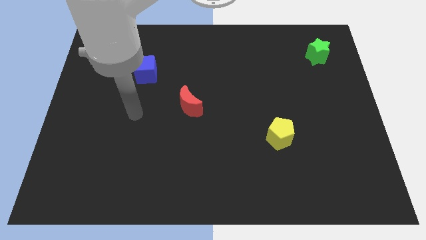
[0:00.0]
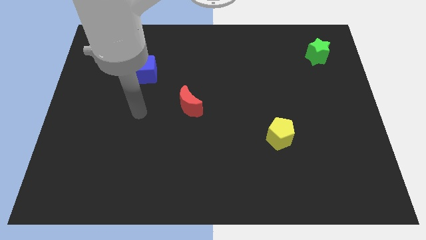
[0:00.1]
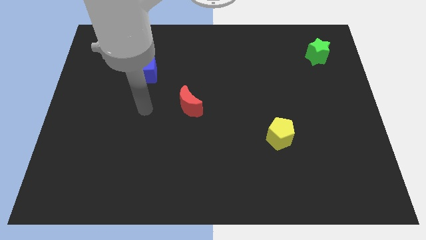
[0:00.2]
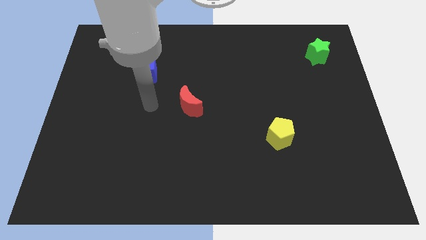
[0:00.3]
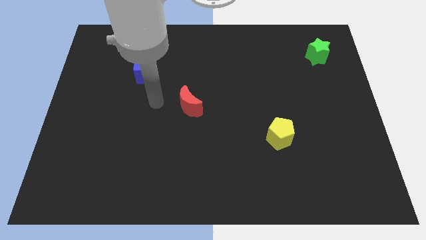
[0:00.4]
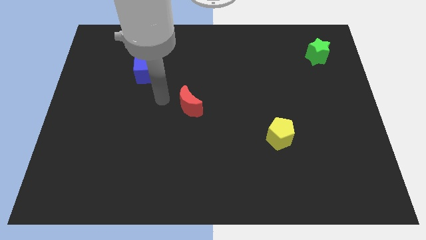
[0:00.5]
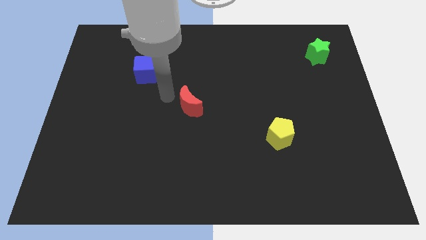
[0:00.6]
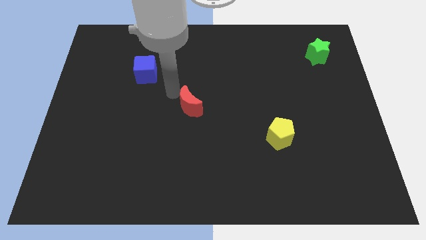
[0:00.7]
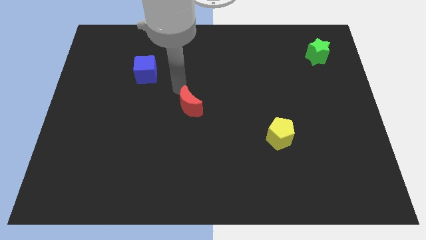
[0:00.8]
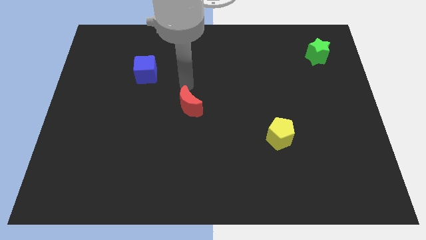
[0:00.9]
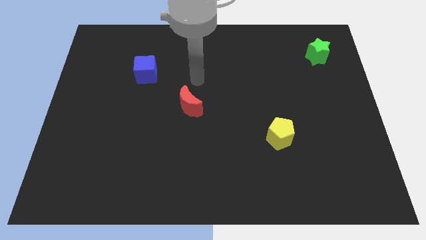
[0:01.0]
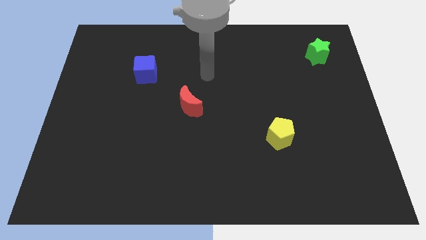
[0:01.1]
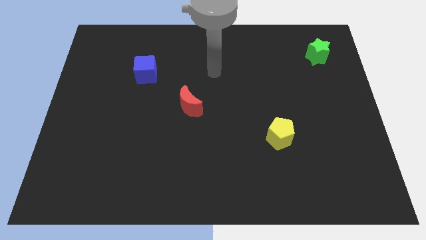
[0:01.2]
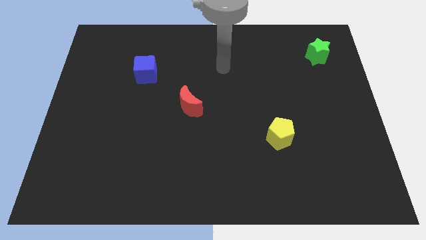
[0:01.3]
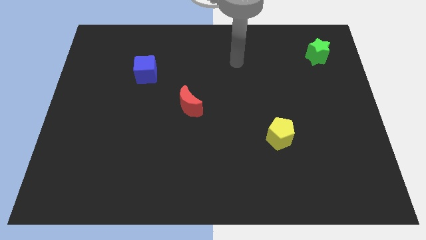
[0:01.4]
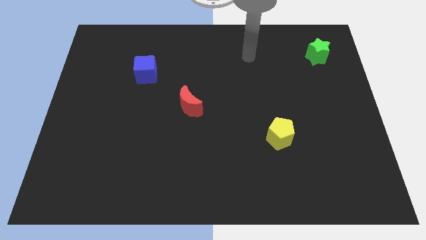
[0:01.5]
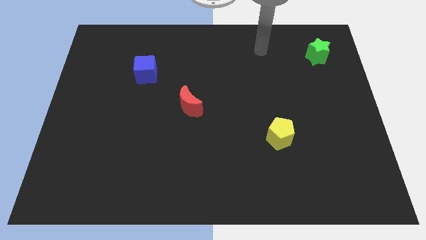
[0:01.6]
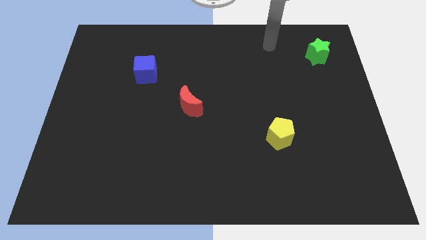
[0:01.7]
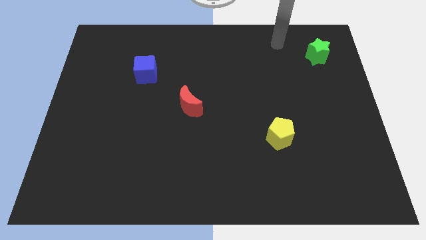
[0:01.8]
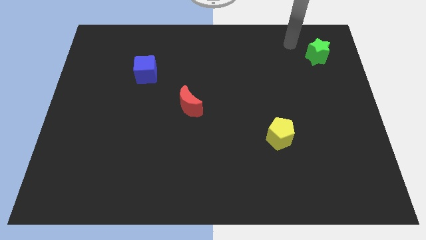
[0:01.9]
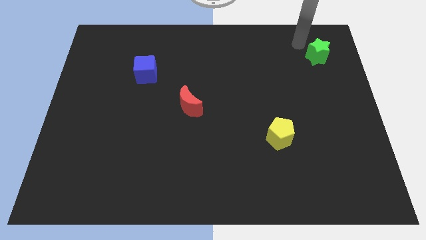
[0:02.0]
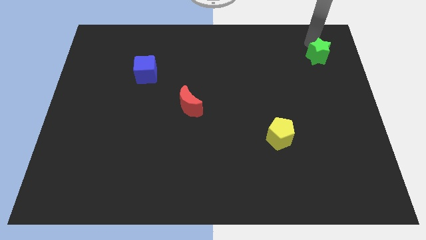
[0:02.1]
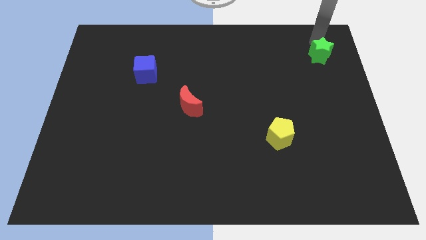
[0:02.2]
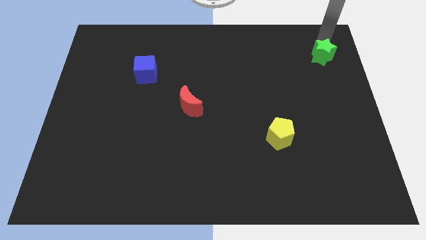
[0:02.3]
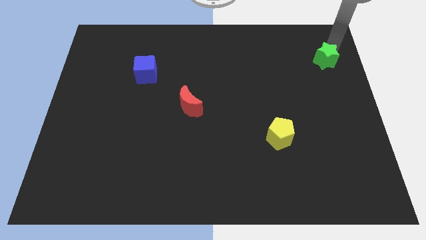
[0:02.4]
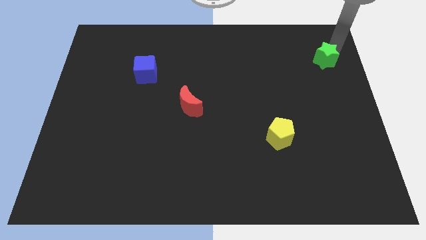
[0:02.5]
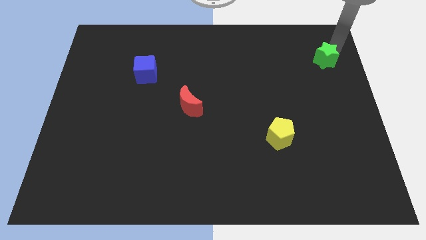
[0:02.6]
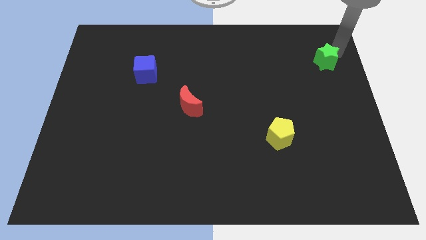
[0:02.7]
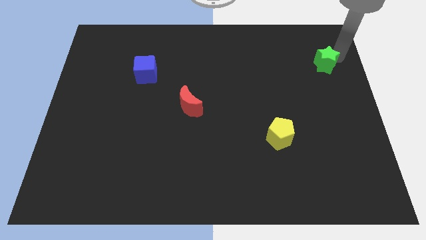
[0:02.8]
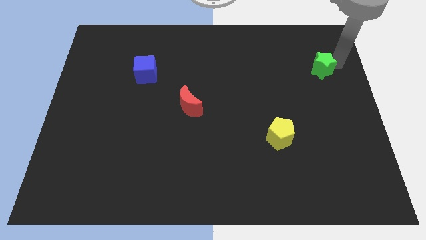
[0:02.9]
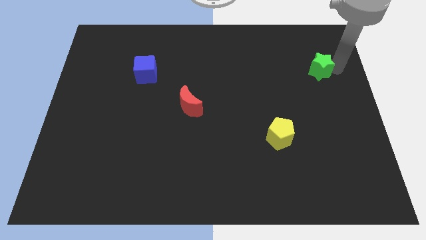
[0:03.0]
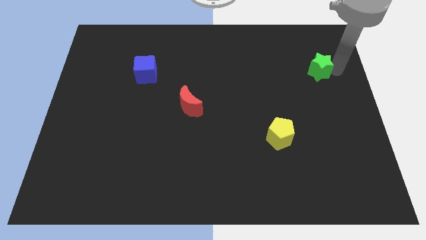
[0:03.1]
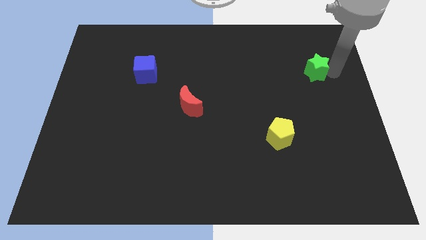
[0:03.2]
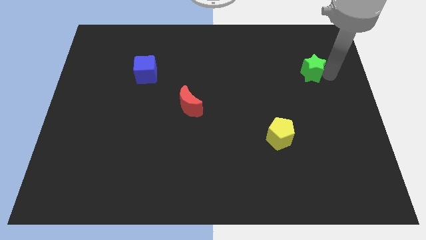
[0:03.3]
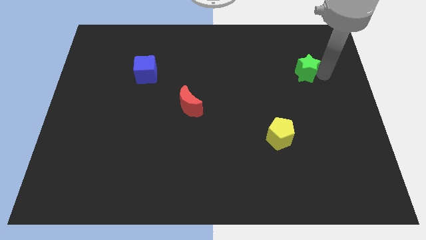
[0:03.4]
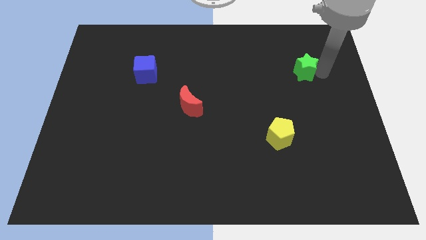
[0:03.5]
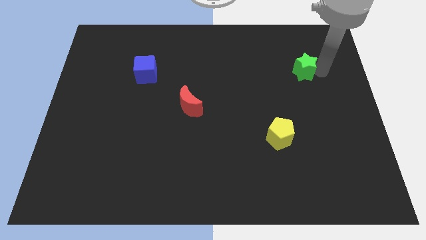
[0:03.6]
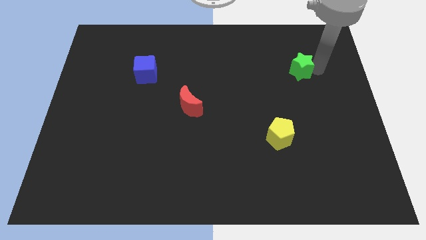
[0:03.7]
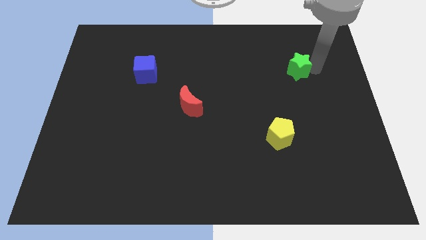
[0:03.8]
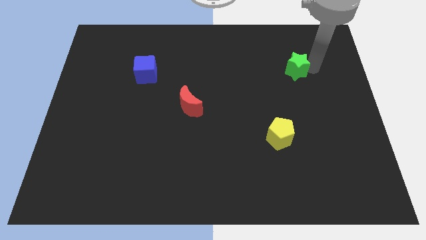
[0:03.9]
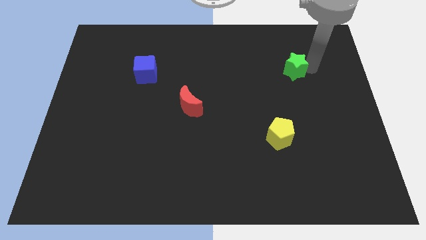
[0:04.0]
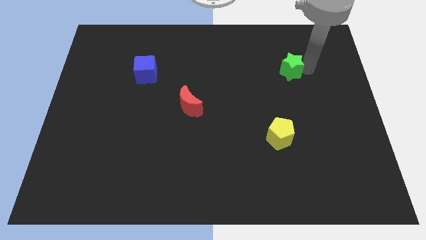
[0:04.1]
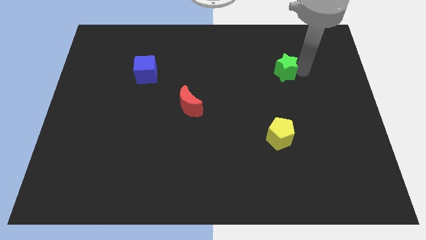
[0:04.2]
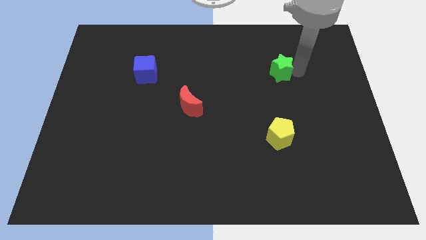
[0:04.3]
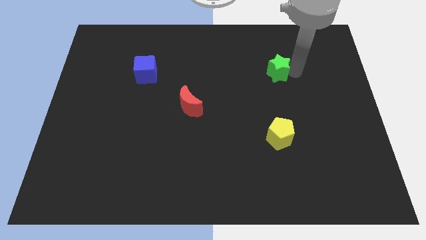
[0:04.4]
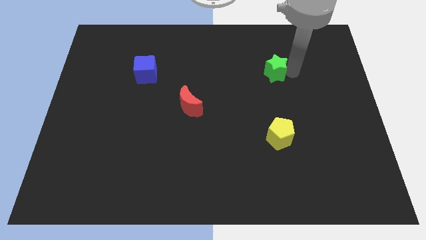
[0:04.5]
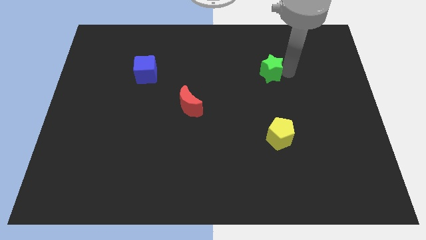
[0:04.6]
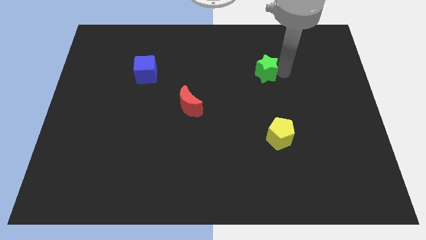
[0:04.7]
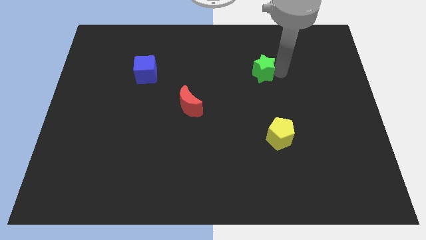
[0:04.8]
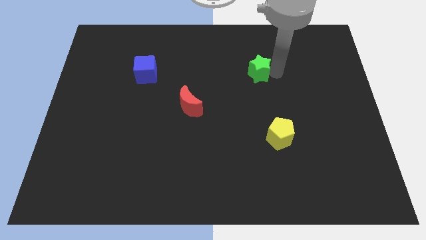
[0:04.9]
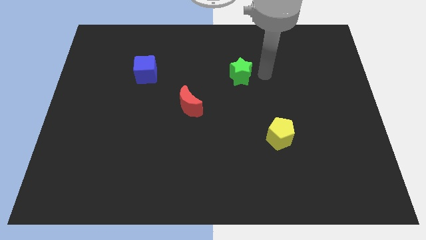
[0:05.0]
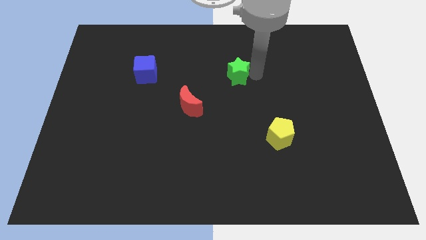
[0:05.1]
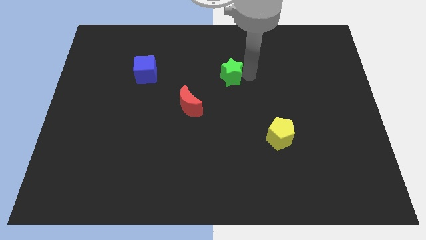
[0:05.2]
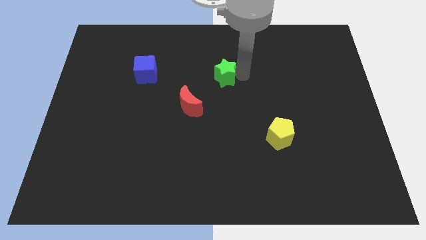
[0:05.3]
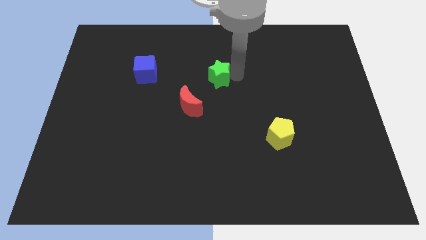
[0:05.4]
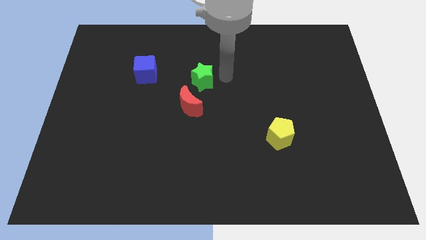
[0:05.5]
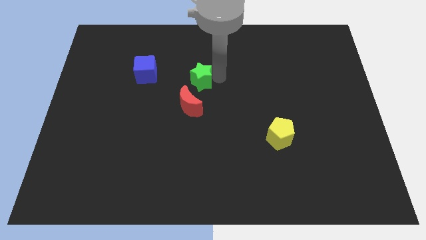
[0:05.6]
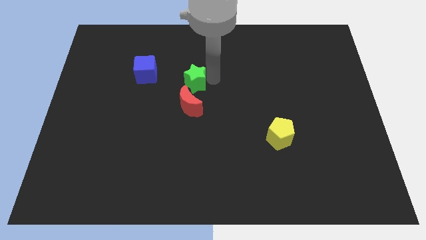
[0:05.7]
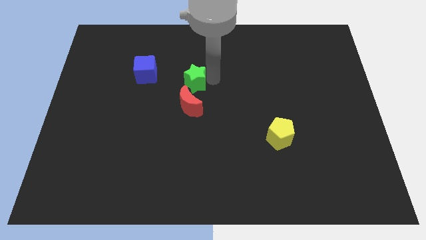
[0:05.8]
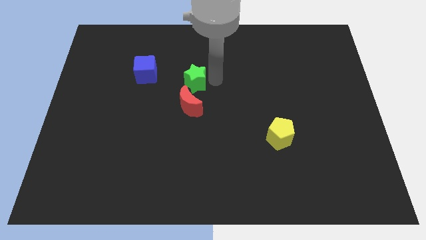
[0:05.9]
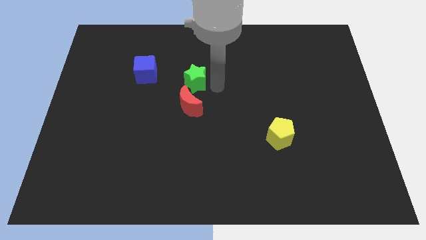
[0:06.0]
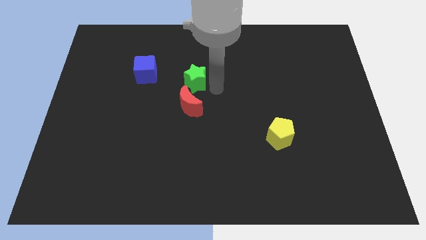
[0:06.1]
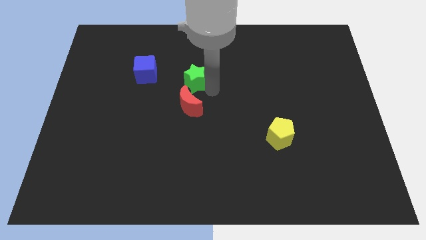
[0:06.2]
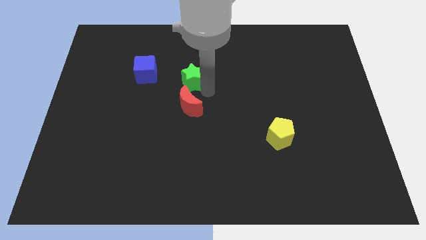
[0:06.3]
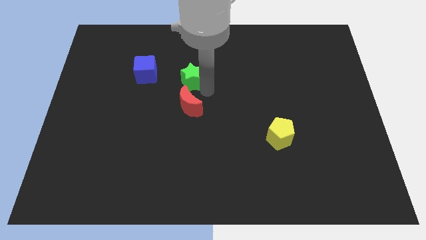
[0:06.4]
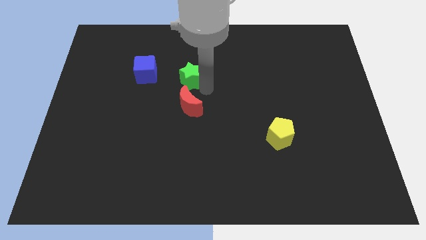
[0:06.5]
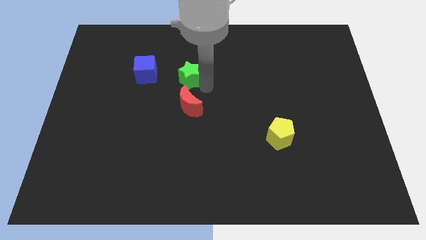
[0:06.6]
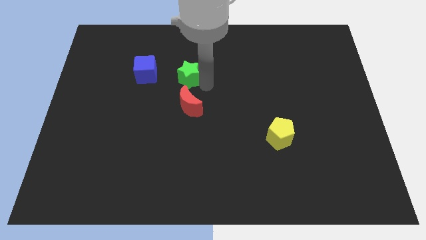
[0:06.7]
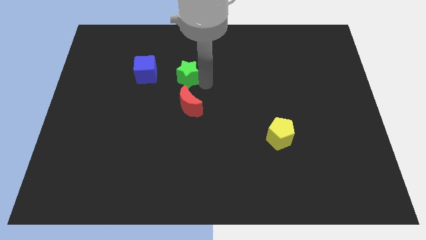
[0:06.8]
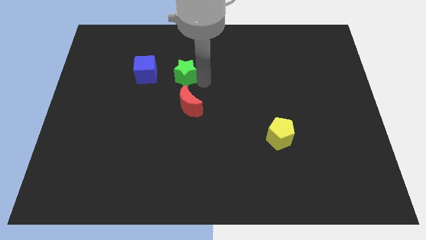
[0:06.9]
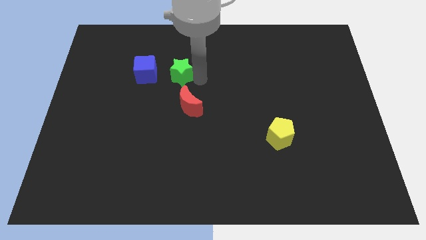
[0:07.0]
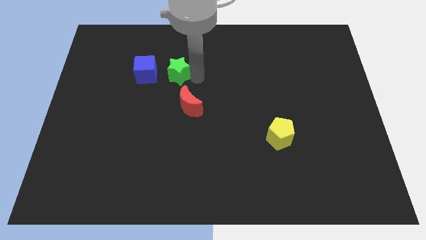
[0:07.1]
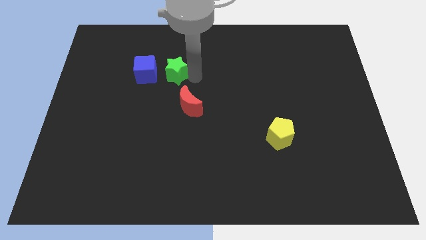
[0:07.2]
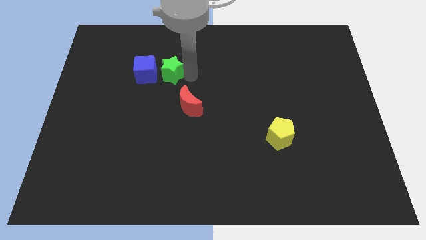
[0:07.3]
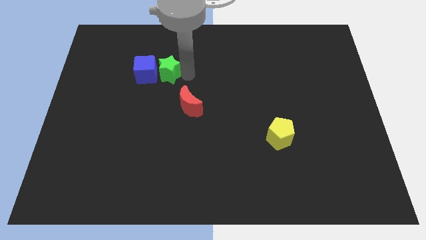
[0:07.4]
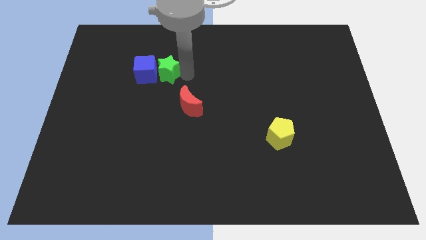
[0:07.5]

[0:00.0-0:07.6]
move the star next to the cube

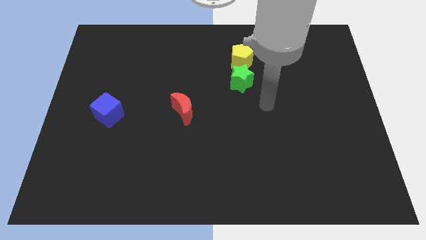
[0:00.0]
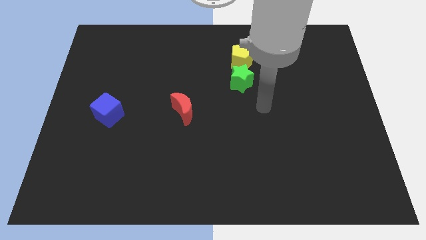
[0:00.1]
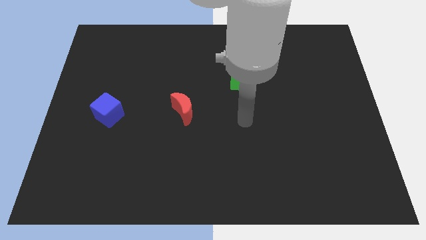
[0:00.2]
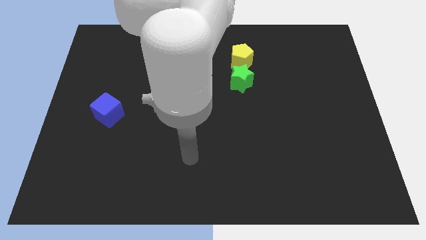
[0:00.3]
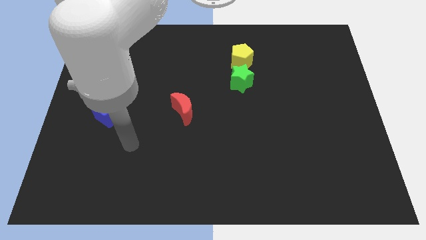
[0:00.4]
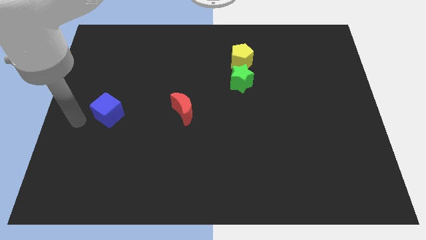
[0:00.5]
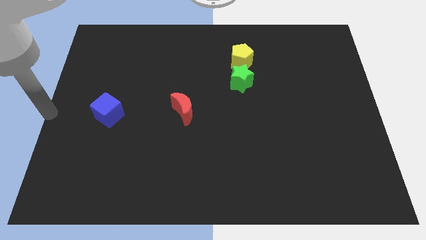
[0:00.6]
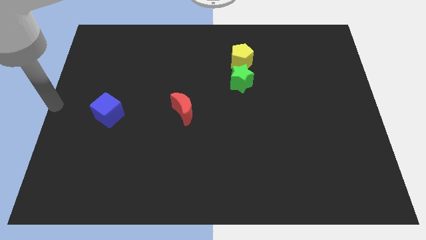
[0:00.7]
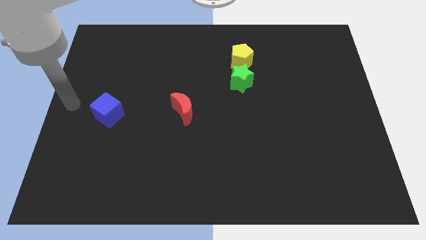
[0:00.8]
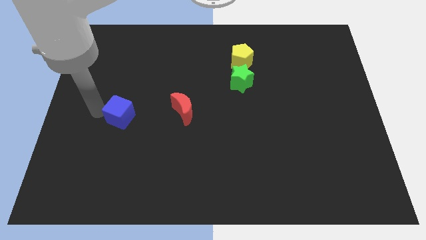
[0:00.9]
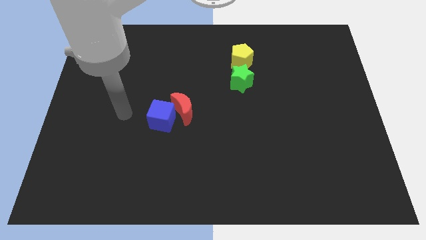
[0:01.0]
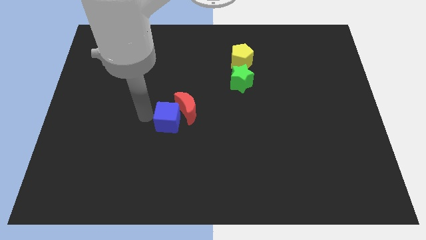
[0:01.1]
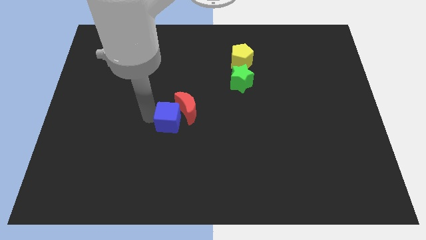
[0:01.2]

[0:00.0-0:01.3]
move the blue cube close to the red moon
